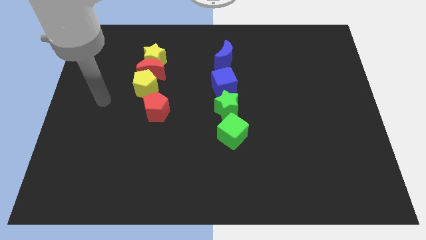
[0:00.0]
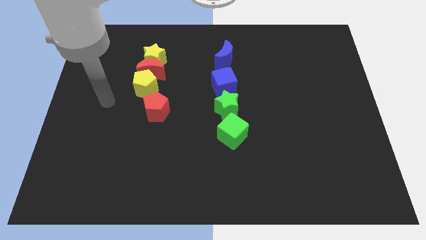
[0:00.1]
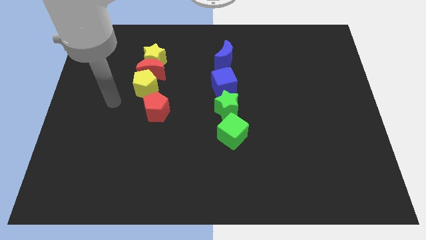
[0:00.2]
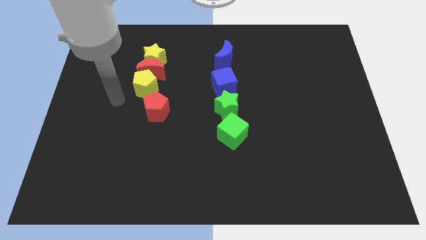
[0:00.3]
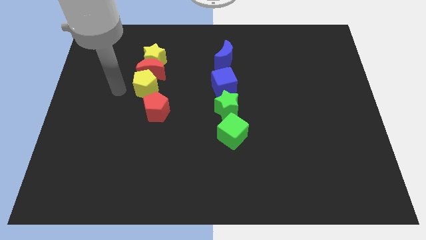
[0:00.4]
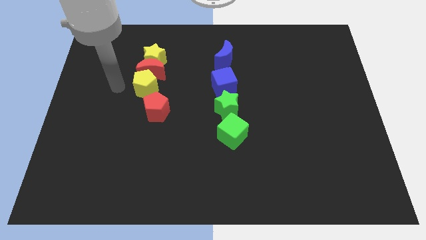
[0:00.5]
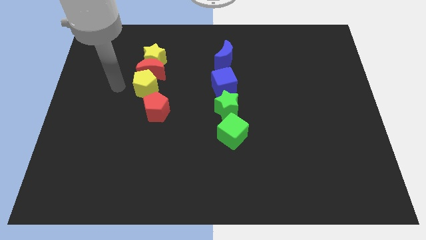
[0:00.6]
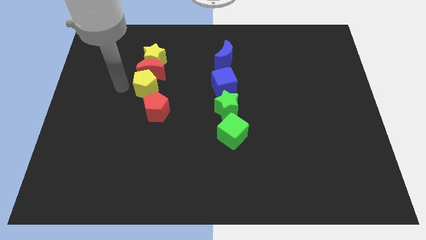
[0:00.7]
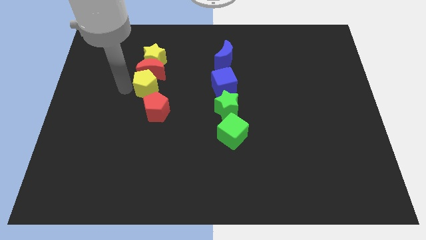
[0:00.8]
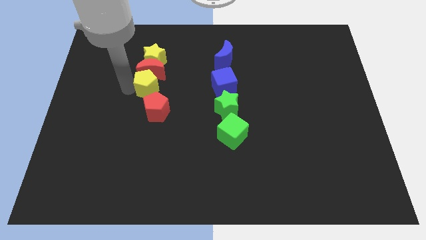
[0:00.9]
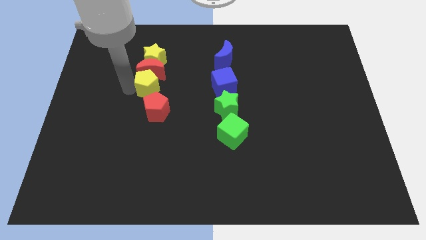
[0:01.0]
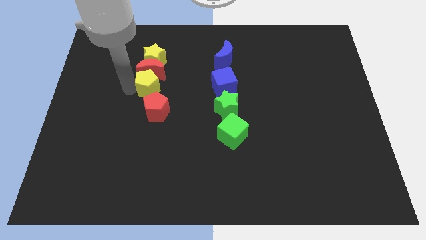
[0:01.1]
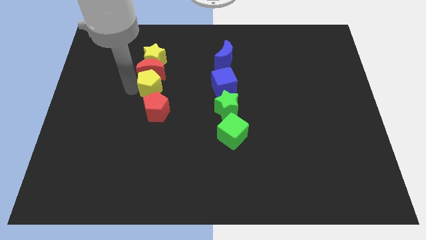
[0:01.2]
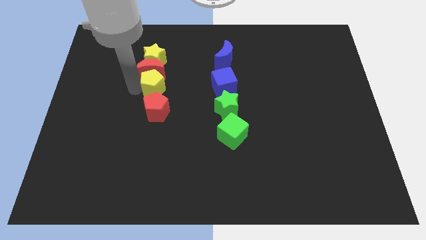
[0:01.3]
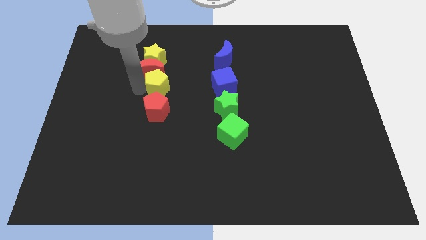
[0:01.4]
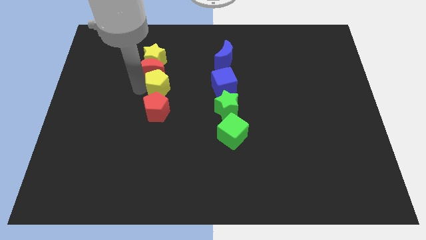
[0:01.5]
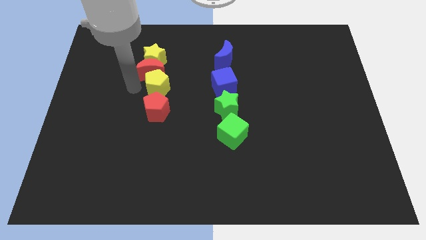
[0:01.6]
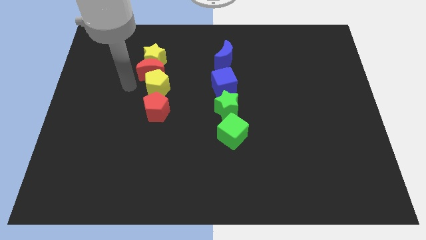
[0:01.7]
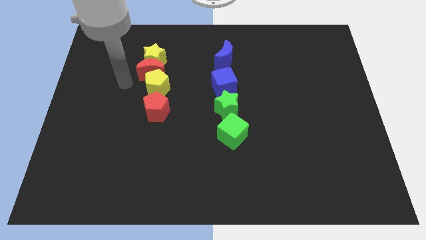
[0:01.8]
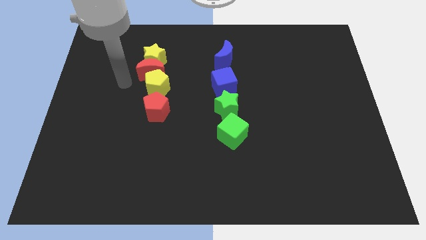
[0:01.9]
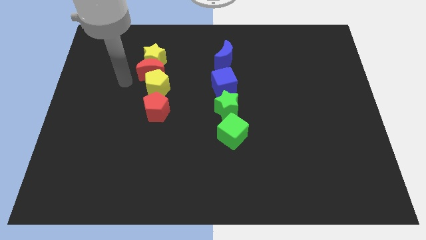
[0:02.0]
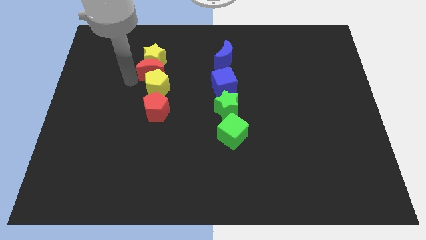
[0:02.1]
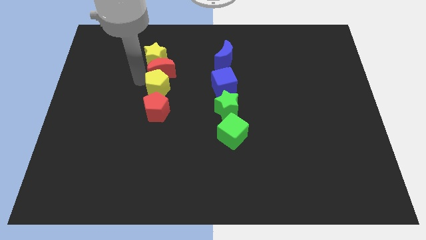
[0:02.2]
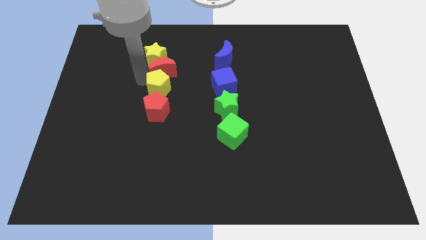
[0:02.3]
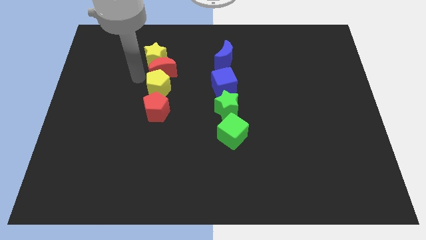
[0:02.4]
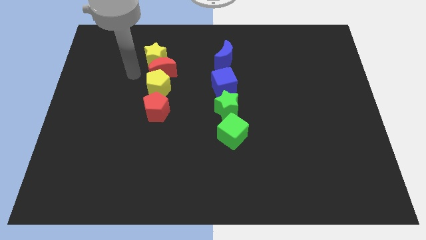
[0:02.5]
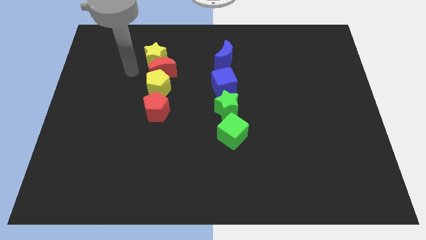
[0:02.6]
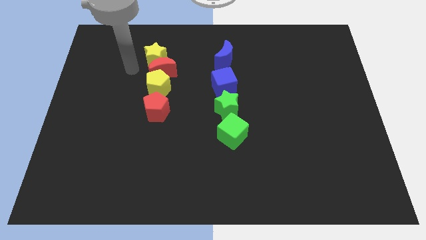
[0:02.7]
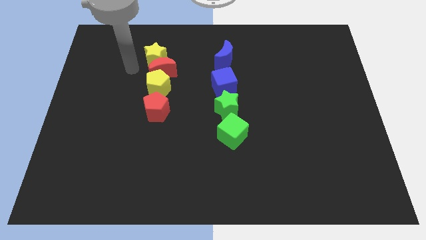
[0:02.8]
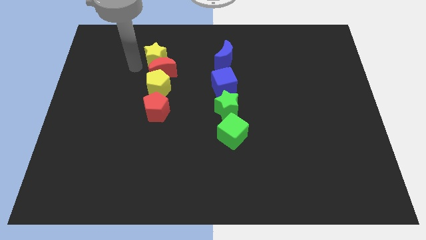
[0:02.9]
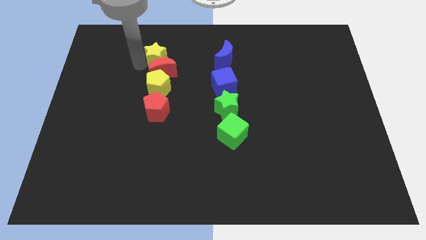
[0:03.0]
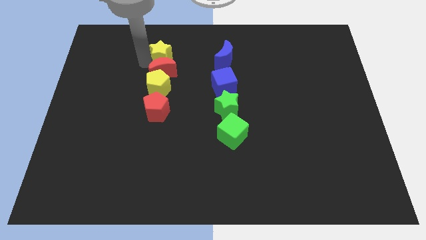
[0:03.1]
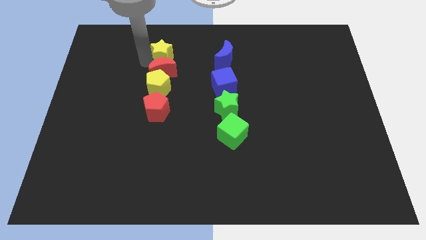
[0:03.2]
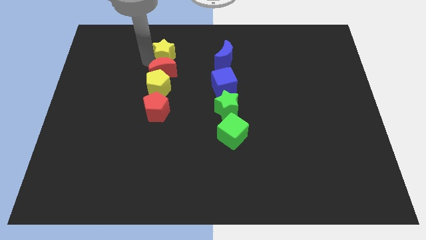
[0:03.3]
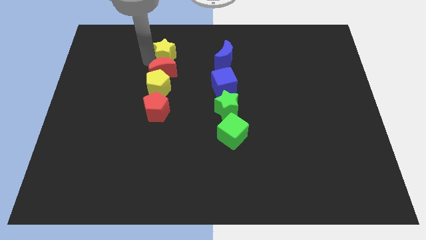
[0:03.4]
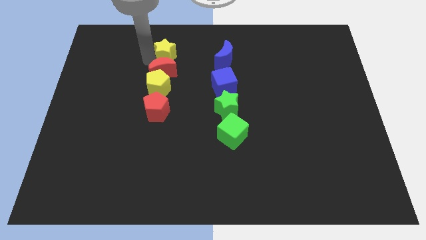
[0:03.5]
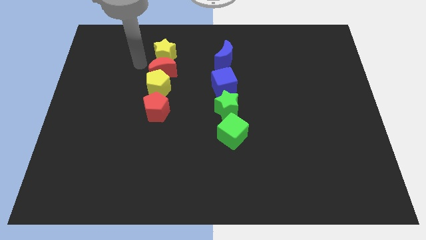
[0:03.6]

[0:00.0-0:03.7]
adjust yellow and red blocks to form a vertical line

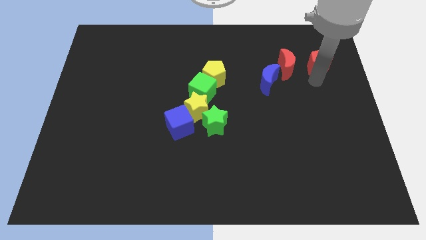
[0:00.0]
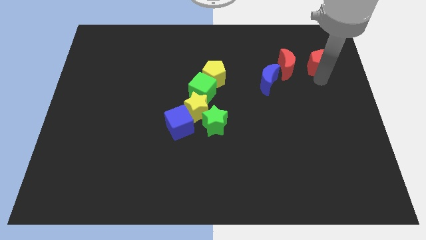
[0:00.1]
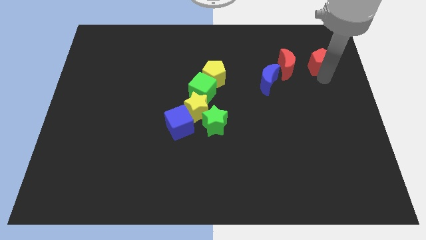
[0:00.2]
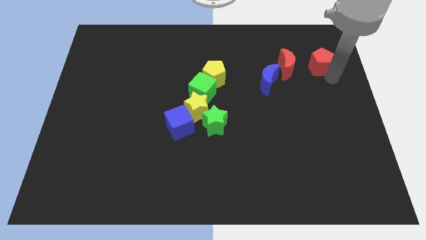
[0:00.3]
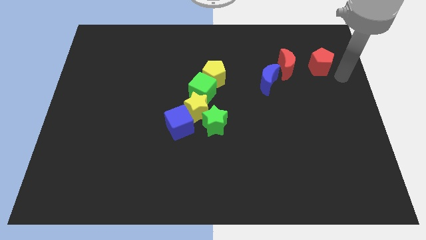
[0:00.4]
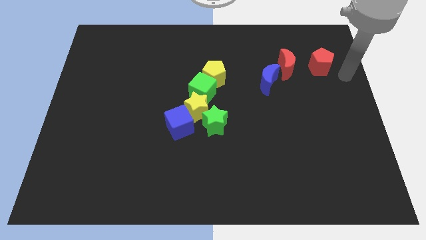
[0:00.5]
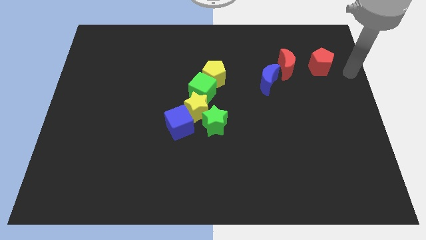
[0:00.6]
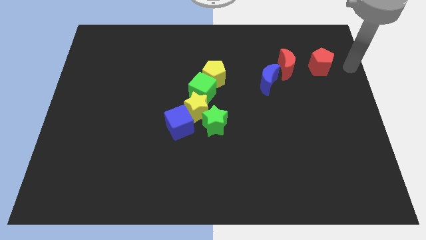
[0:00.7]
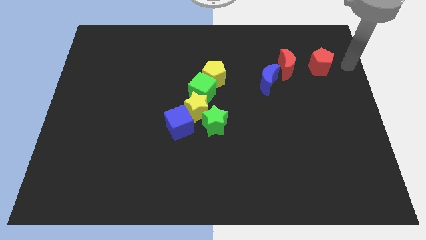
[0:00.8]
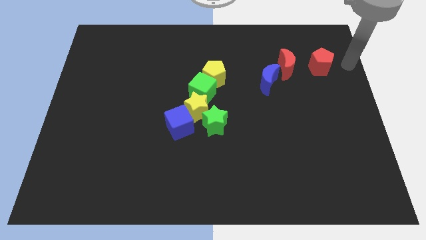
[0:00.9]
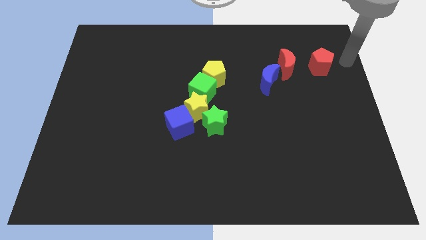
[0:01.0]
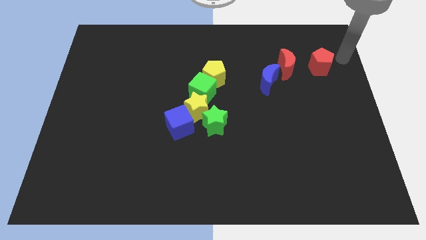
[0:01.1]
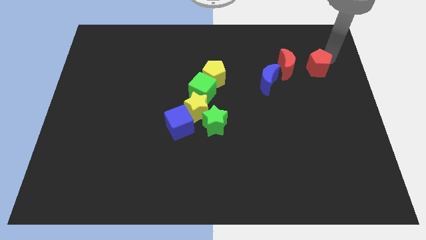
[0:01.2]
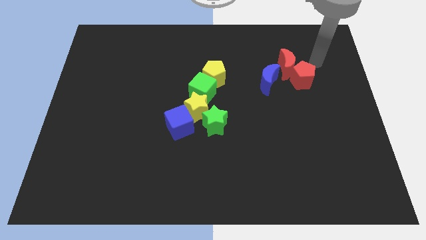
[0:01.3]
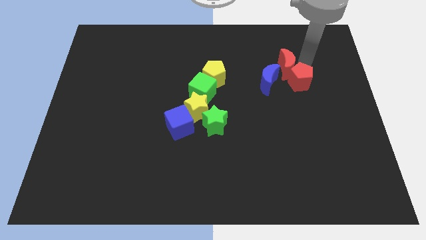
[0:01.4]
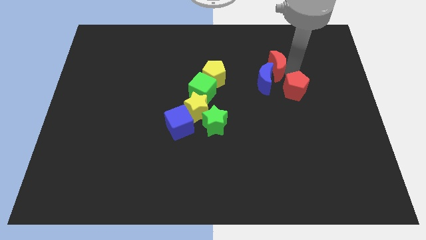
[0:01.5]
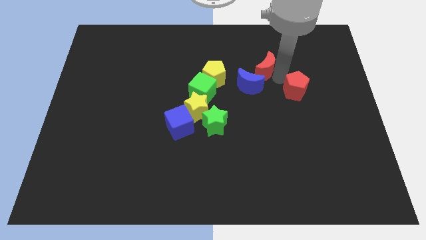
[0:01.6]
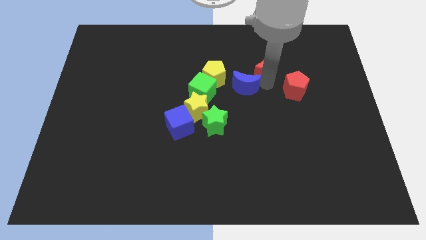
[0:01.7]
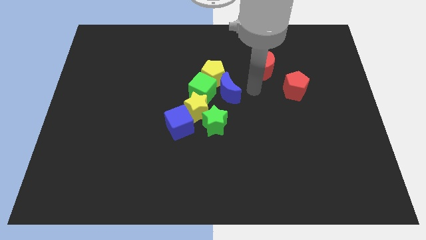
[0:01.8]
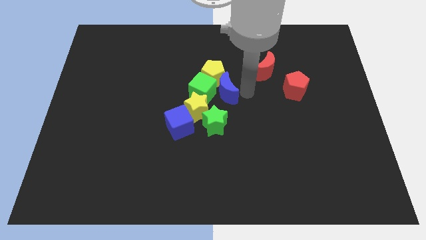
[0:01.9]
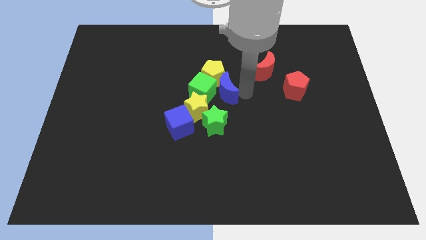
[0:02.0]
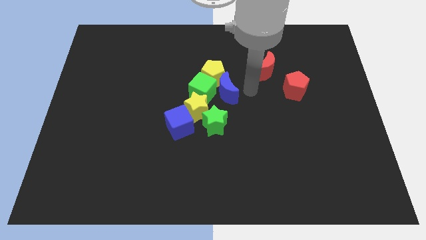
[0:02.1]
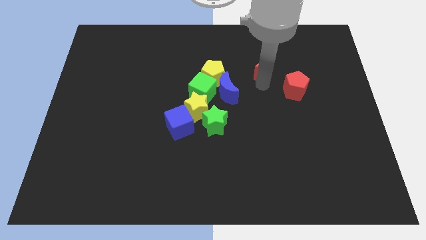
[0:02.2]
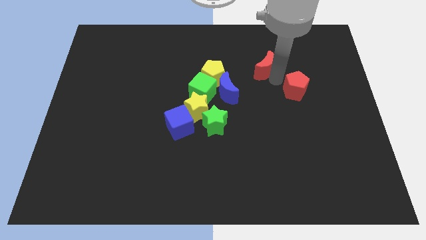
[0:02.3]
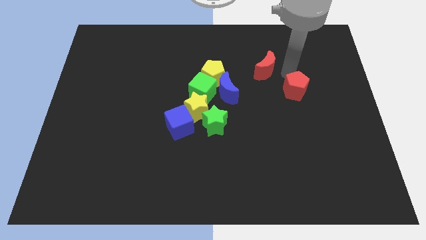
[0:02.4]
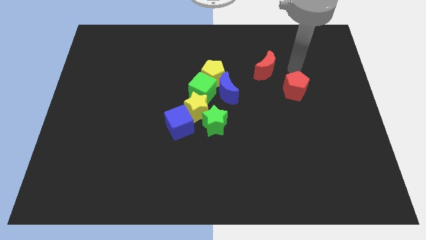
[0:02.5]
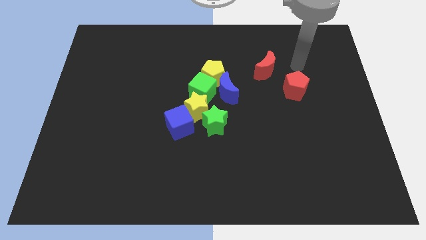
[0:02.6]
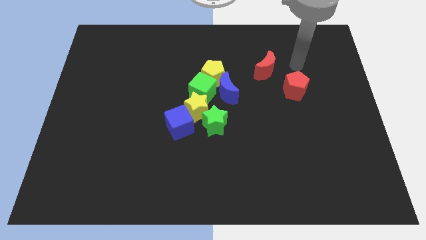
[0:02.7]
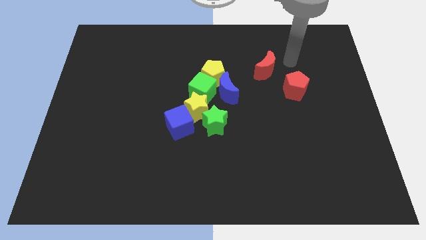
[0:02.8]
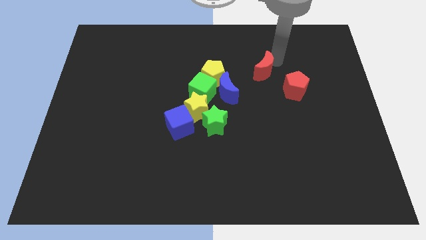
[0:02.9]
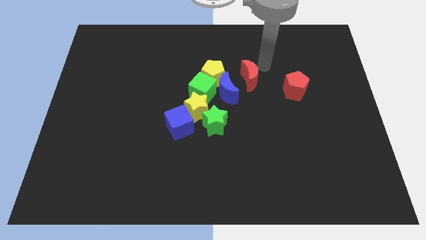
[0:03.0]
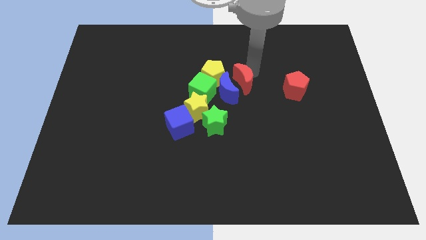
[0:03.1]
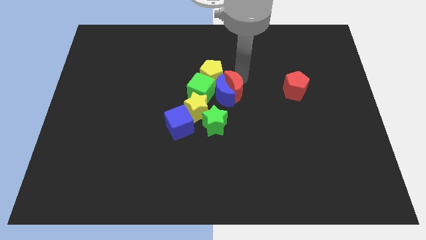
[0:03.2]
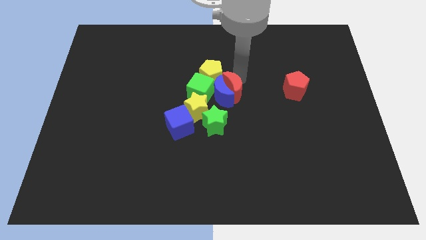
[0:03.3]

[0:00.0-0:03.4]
push the red and blue moon into the group of objects

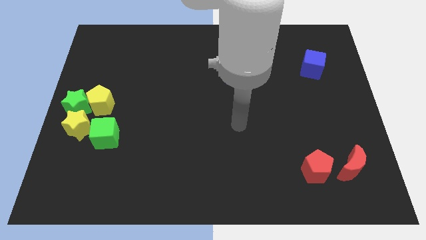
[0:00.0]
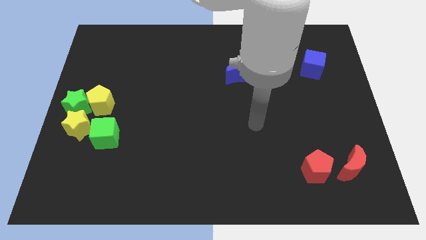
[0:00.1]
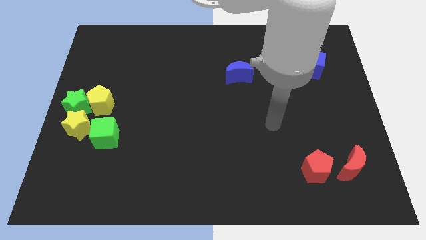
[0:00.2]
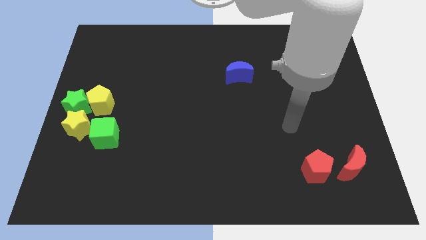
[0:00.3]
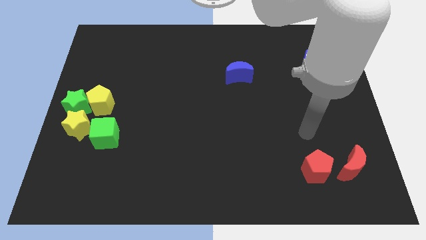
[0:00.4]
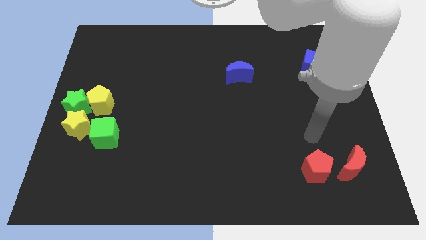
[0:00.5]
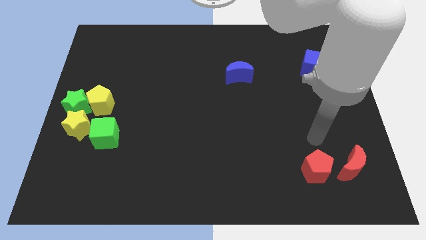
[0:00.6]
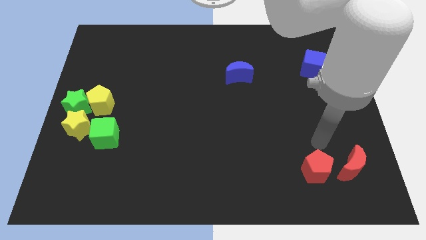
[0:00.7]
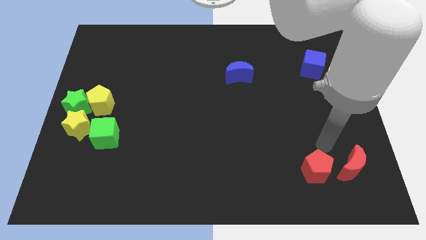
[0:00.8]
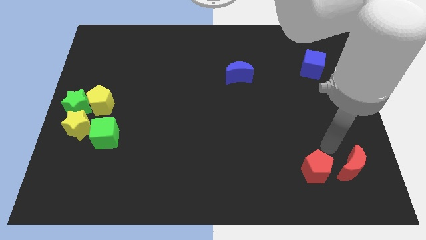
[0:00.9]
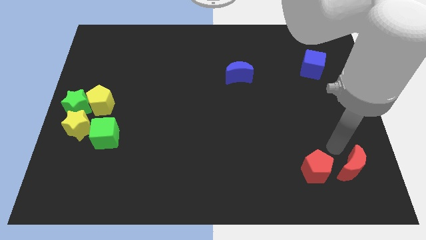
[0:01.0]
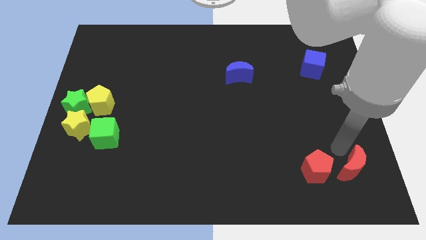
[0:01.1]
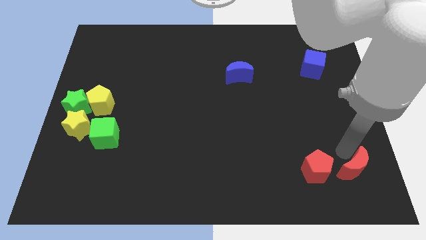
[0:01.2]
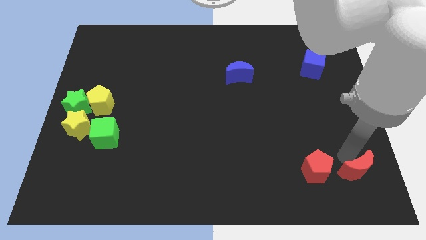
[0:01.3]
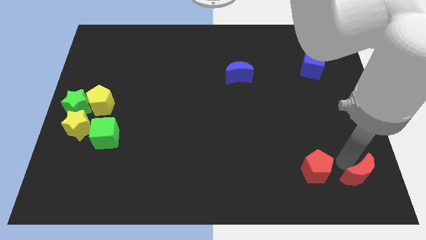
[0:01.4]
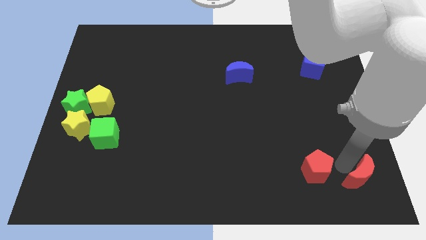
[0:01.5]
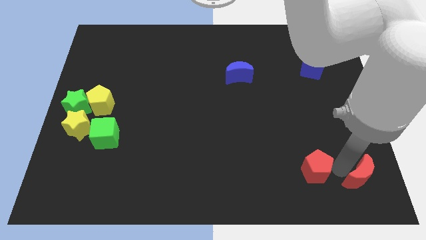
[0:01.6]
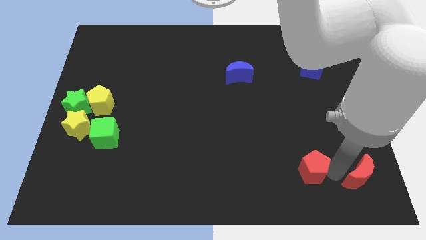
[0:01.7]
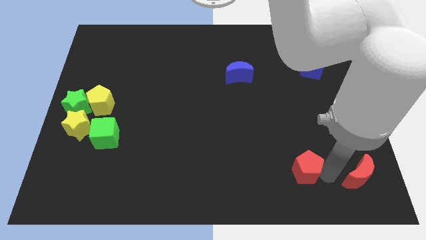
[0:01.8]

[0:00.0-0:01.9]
seperate red pentagon and red moon
